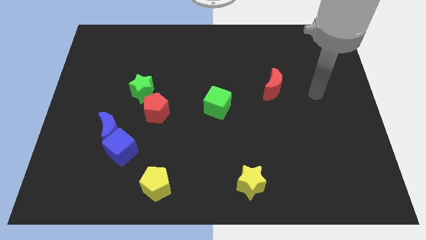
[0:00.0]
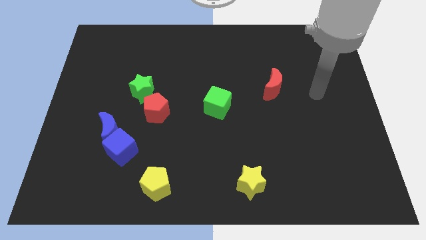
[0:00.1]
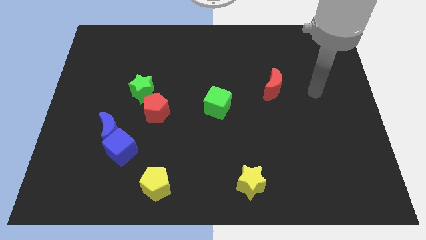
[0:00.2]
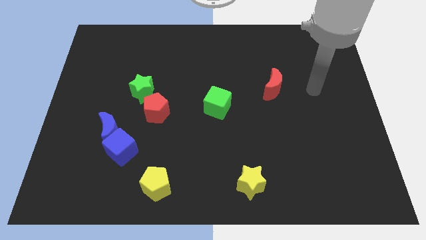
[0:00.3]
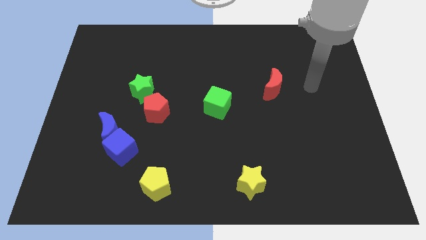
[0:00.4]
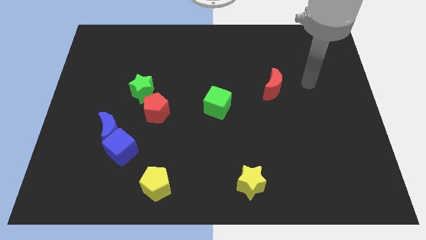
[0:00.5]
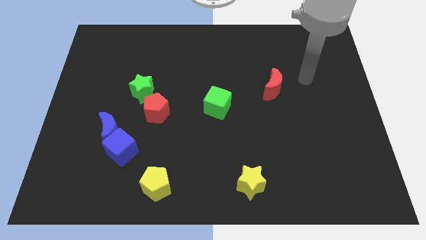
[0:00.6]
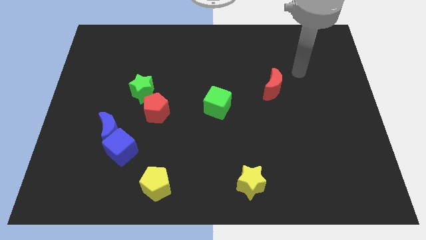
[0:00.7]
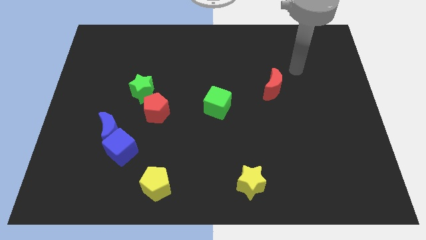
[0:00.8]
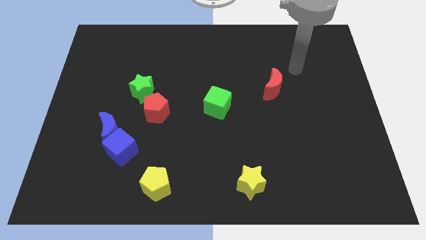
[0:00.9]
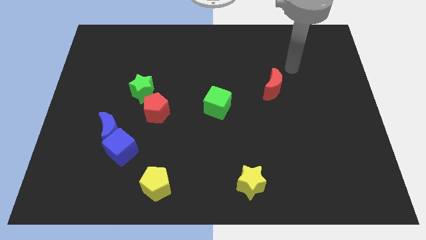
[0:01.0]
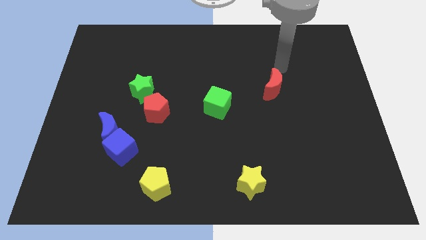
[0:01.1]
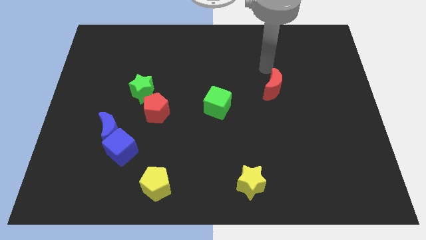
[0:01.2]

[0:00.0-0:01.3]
place your hand above the red crescent

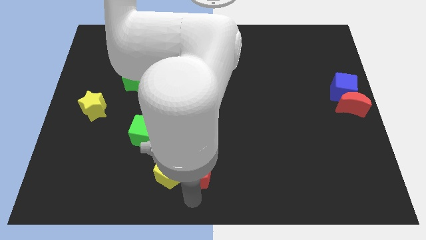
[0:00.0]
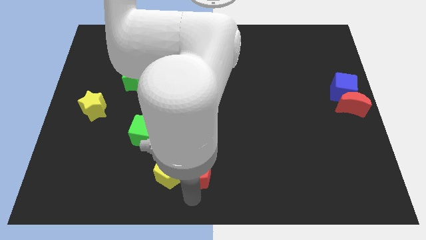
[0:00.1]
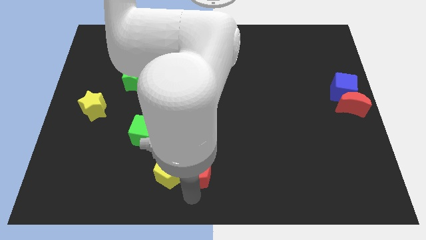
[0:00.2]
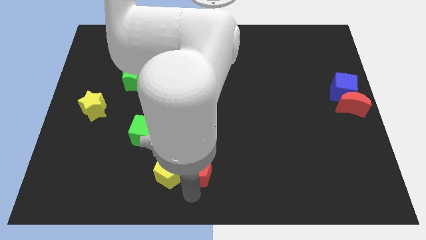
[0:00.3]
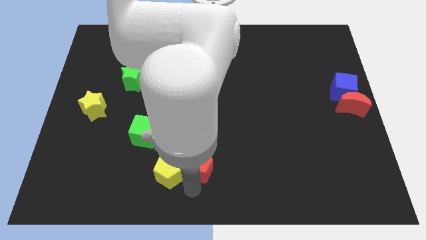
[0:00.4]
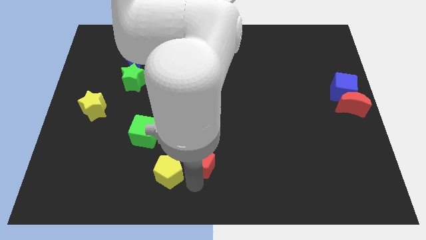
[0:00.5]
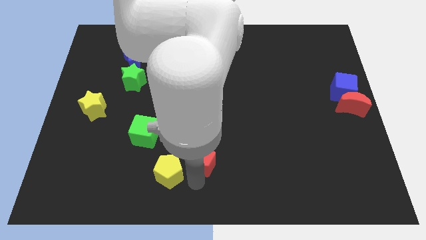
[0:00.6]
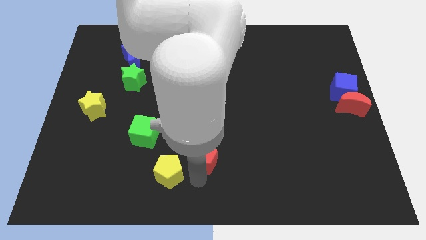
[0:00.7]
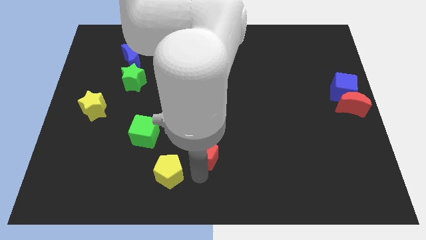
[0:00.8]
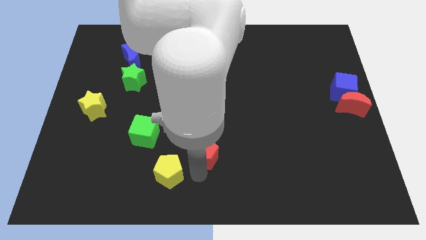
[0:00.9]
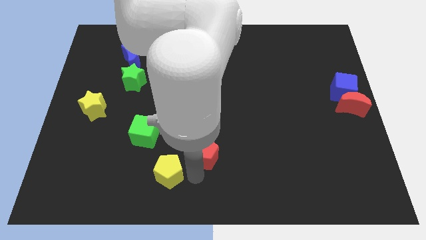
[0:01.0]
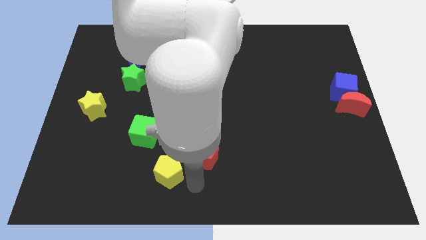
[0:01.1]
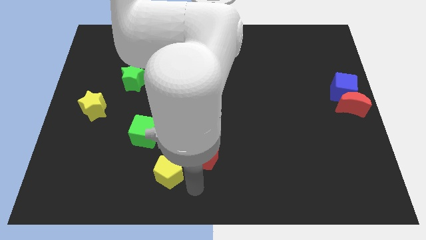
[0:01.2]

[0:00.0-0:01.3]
separate red pentagon from yellow pentagon

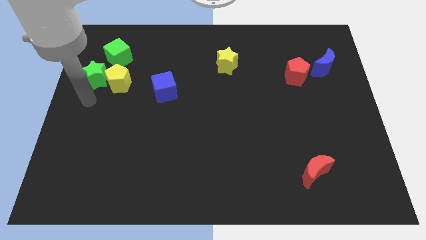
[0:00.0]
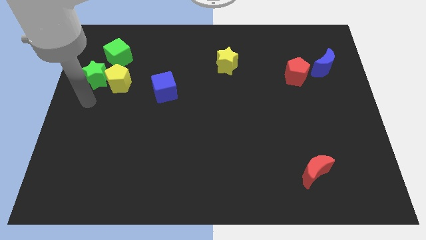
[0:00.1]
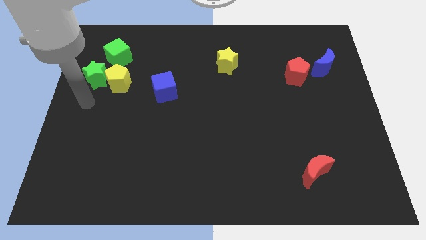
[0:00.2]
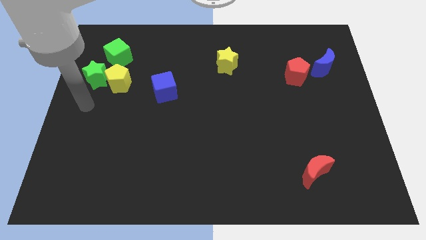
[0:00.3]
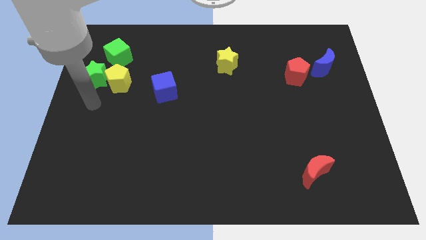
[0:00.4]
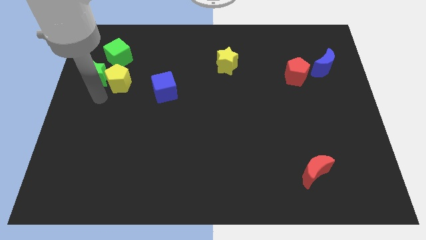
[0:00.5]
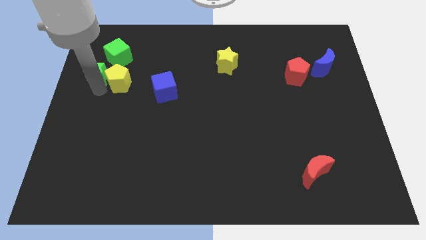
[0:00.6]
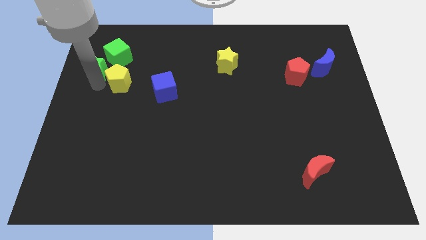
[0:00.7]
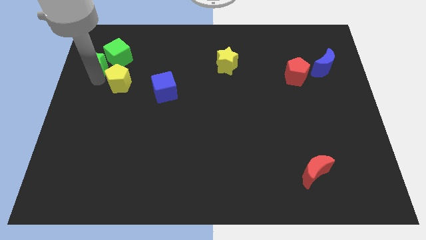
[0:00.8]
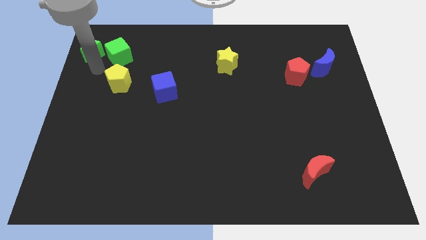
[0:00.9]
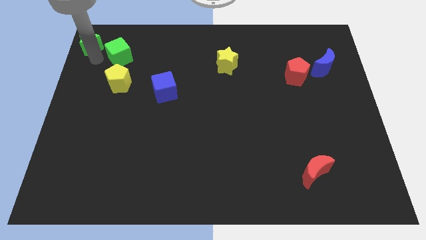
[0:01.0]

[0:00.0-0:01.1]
move the green star towards the left side of the green cube

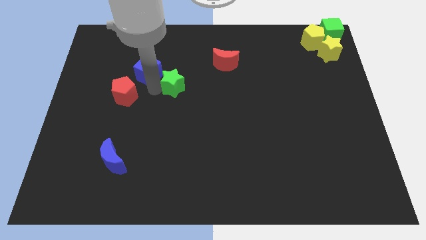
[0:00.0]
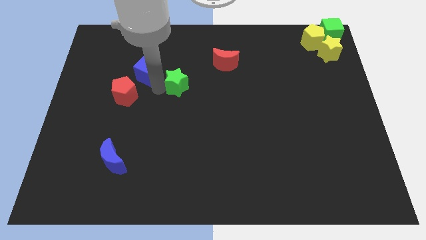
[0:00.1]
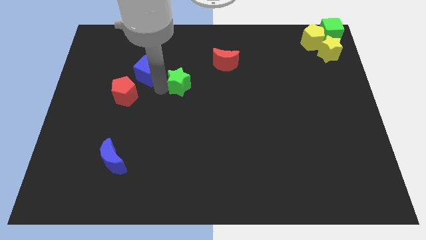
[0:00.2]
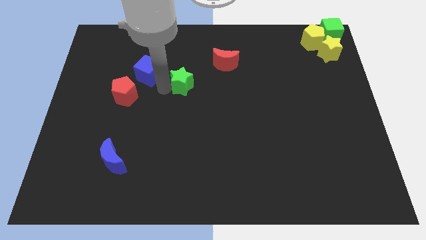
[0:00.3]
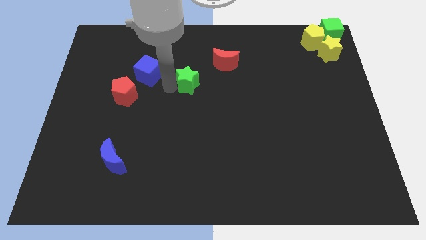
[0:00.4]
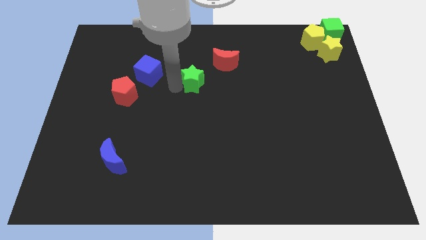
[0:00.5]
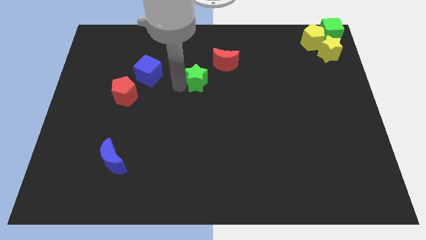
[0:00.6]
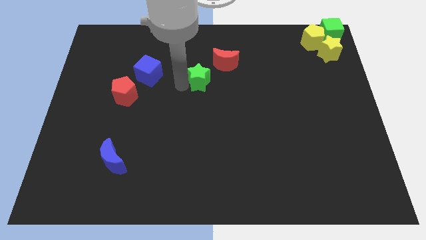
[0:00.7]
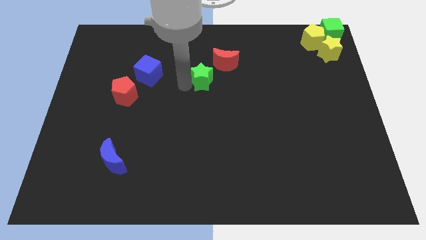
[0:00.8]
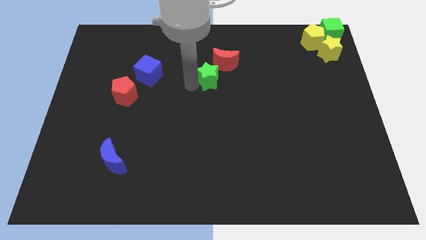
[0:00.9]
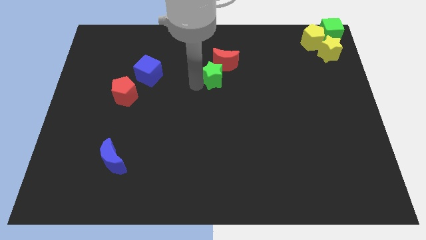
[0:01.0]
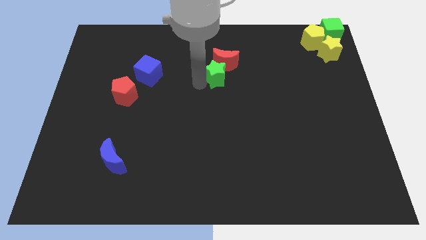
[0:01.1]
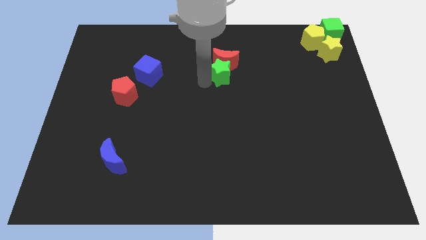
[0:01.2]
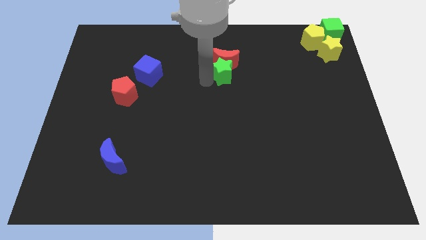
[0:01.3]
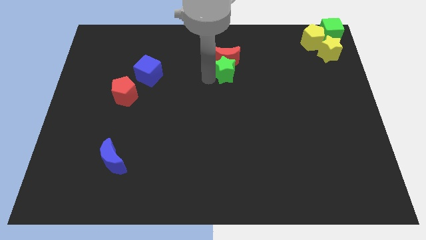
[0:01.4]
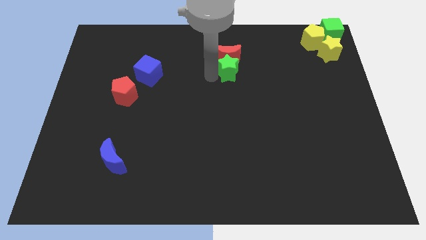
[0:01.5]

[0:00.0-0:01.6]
push the green star to the bottom of the red crescent

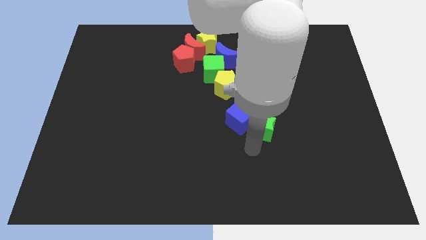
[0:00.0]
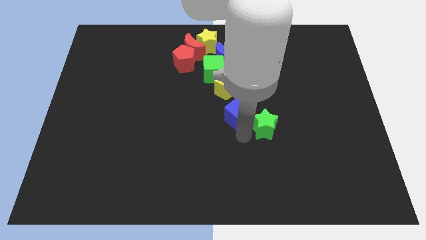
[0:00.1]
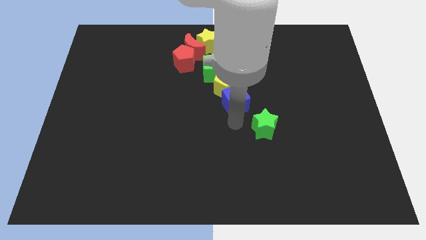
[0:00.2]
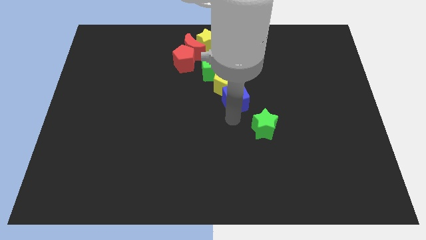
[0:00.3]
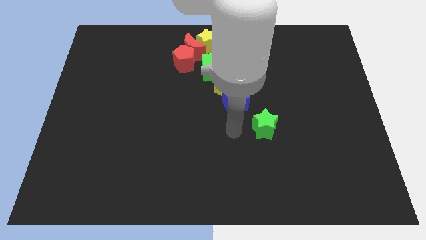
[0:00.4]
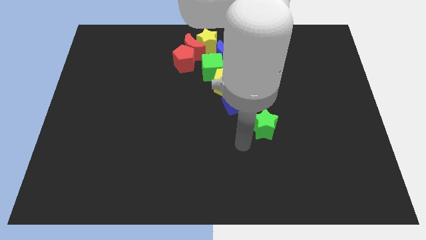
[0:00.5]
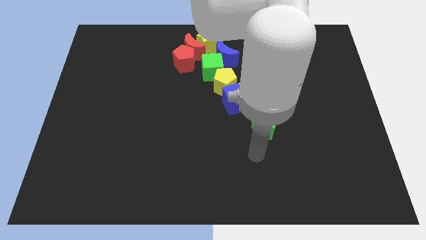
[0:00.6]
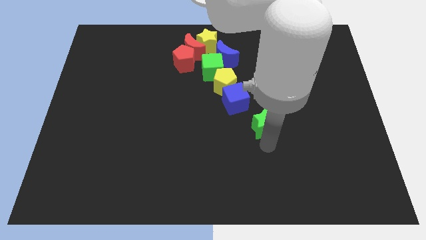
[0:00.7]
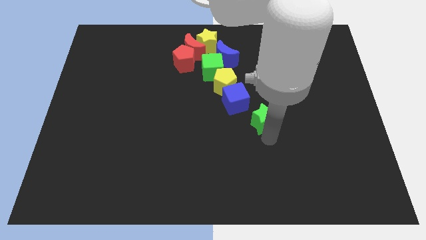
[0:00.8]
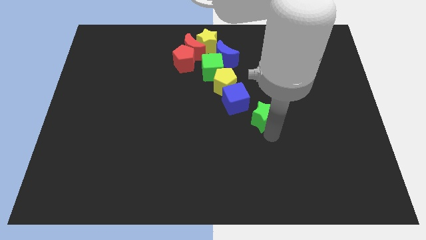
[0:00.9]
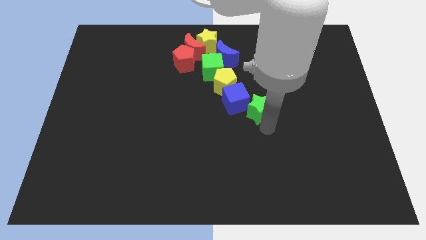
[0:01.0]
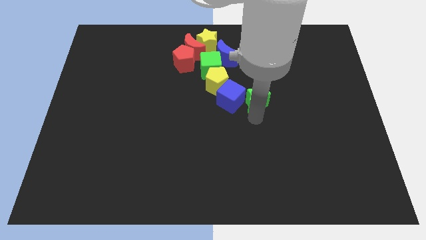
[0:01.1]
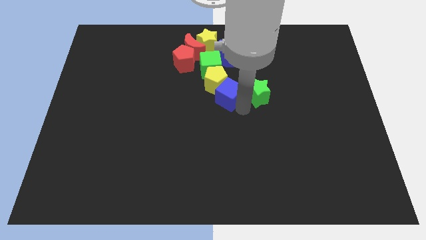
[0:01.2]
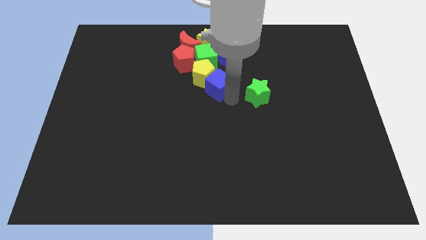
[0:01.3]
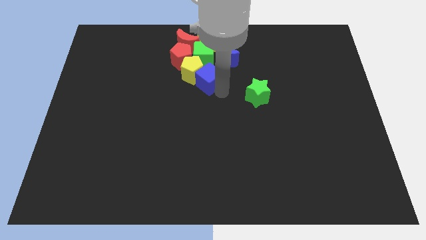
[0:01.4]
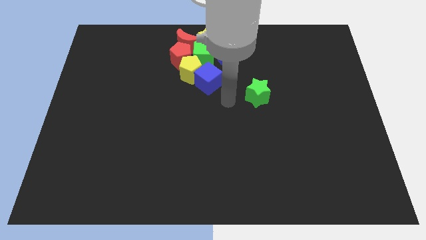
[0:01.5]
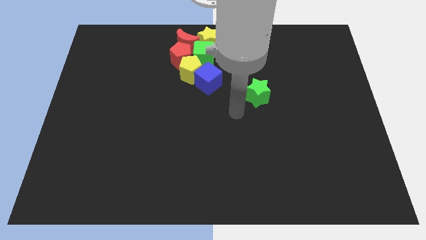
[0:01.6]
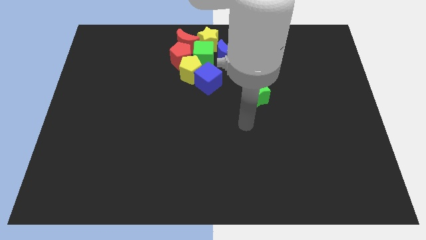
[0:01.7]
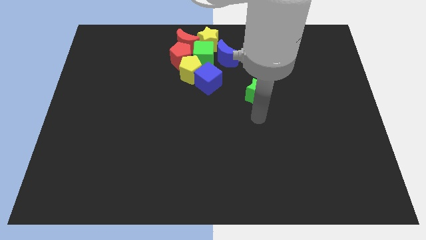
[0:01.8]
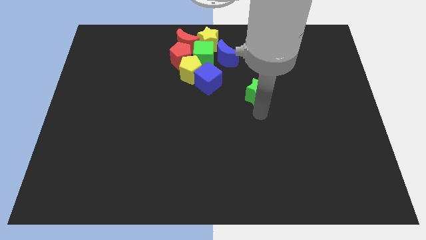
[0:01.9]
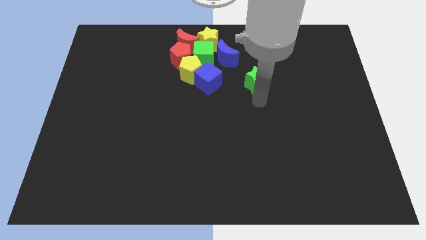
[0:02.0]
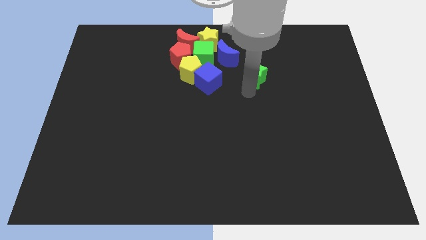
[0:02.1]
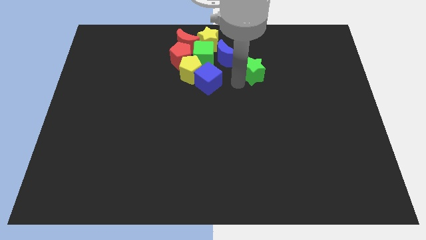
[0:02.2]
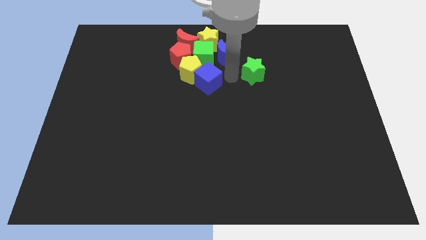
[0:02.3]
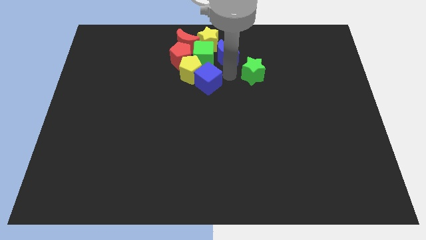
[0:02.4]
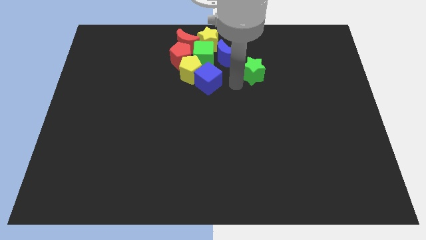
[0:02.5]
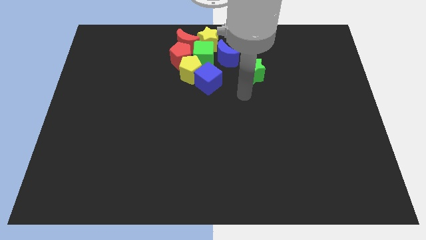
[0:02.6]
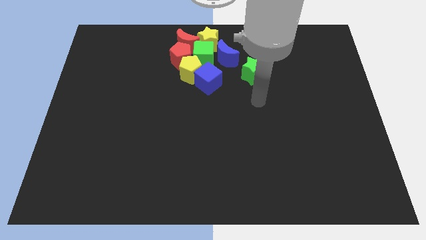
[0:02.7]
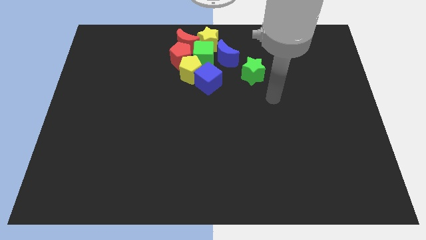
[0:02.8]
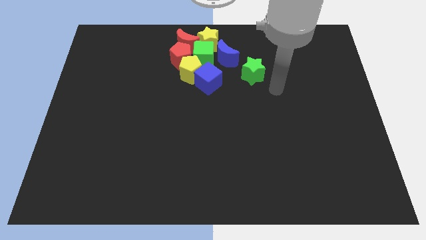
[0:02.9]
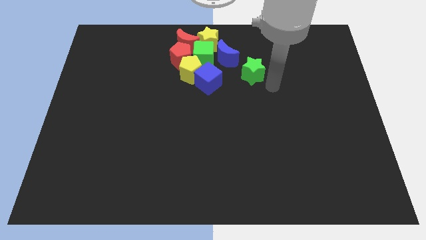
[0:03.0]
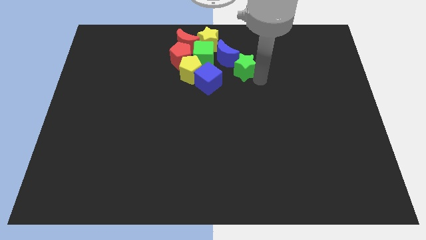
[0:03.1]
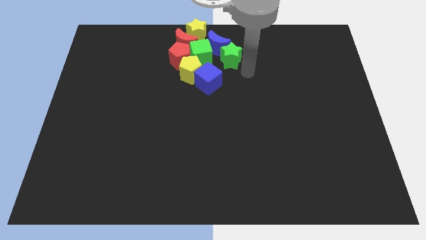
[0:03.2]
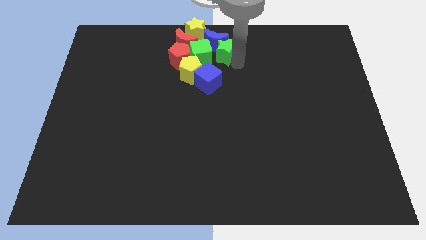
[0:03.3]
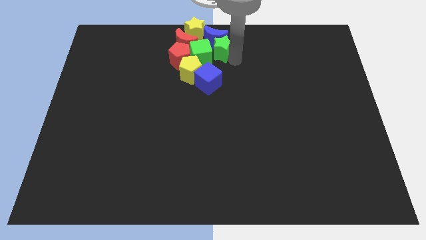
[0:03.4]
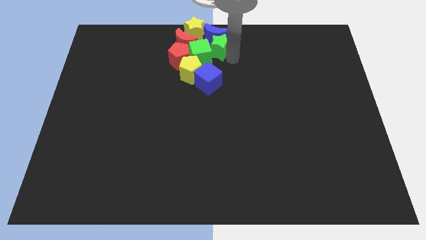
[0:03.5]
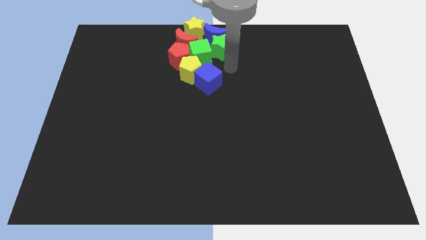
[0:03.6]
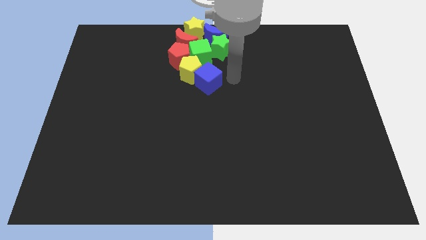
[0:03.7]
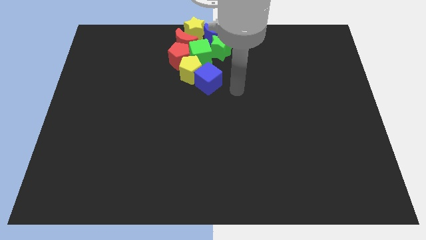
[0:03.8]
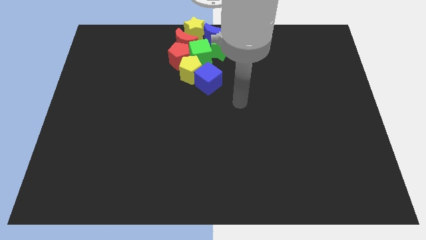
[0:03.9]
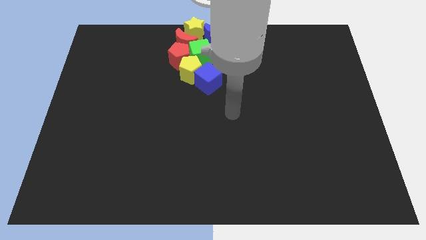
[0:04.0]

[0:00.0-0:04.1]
push the blue cube close to the yellow pentagon
